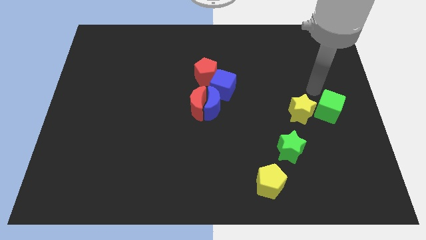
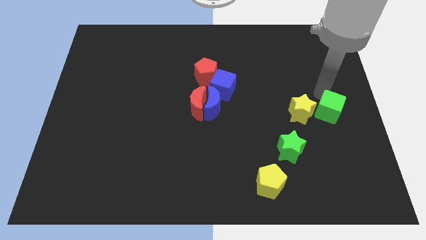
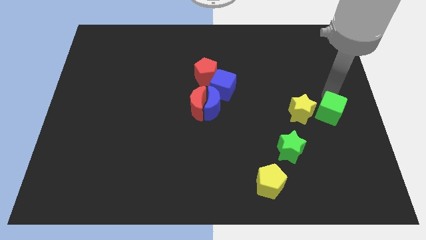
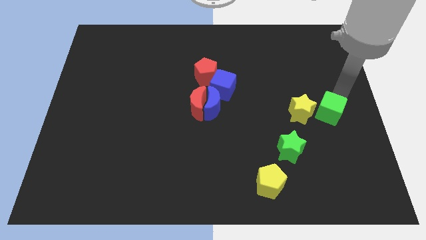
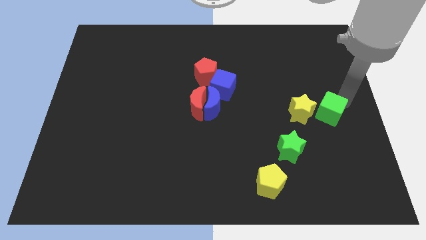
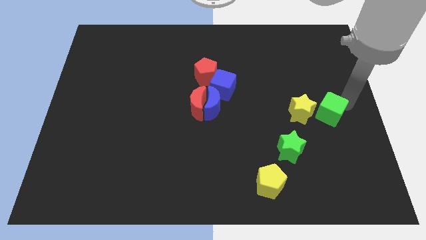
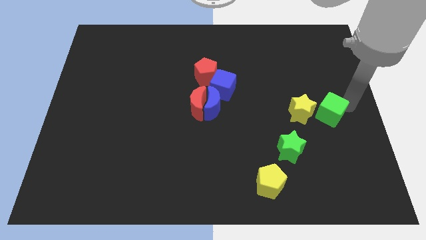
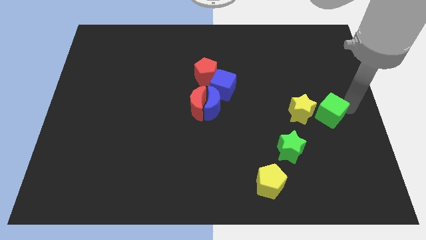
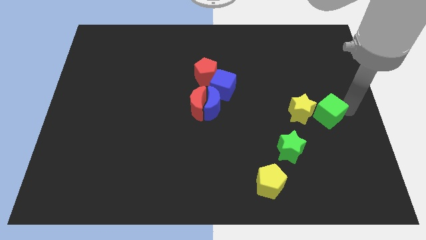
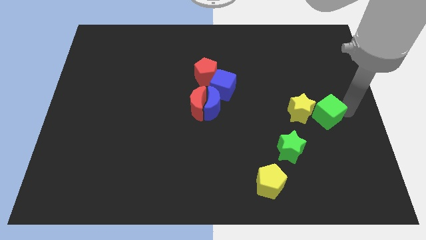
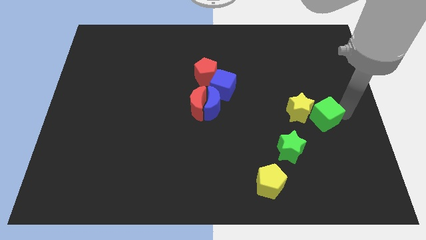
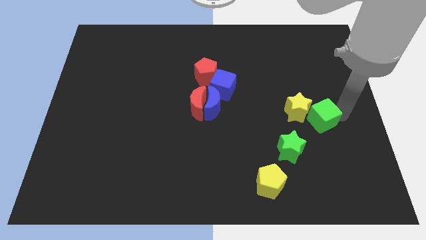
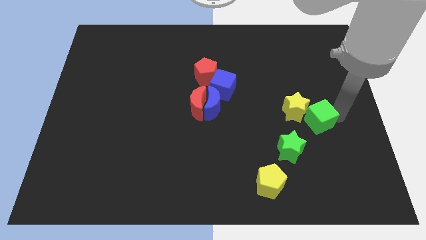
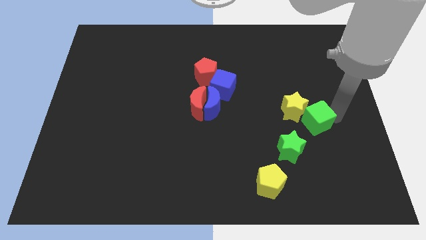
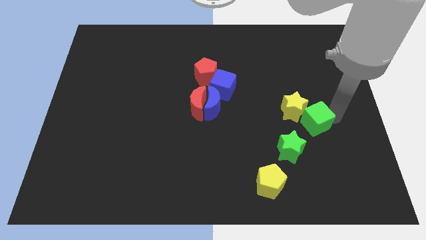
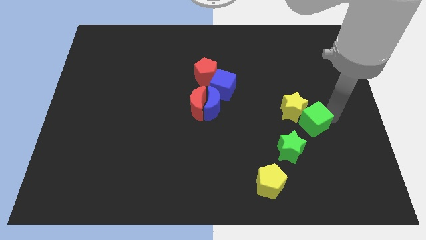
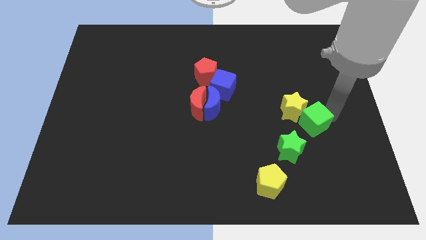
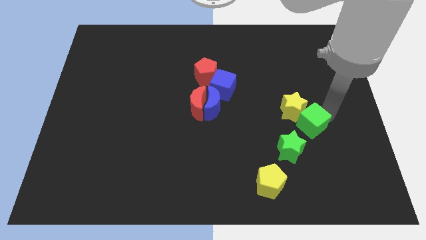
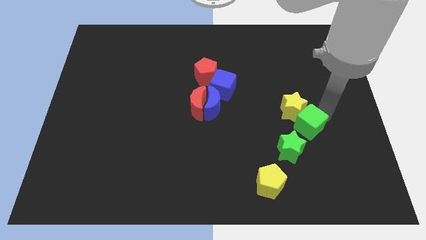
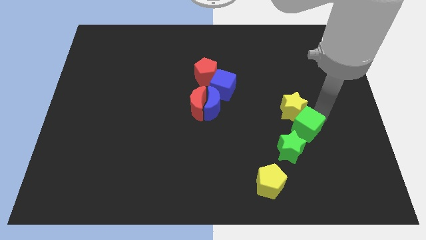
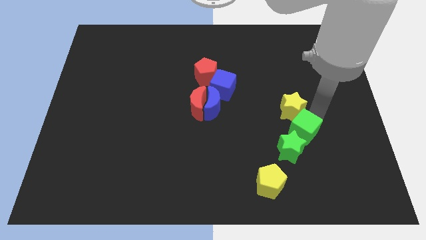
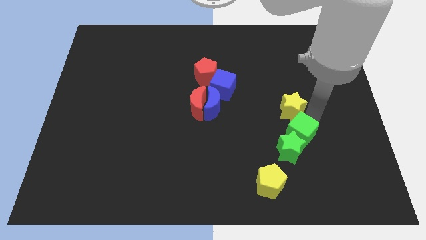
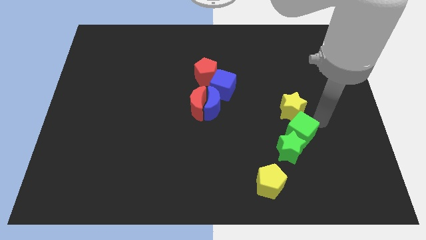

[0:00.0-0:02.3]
push the green cube into the green star

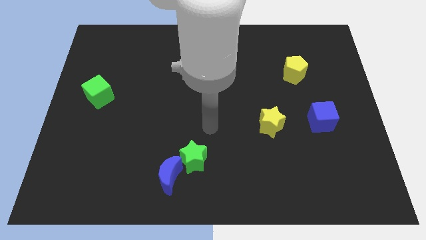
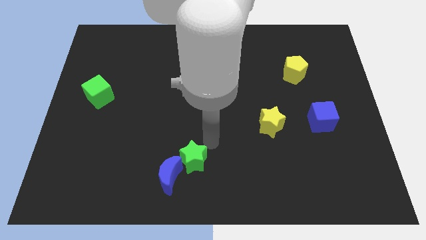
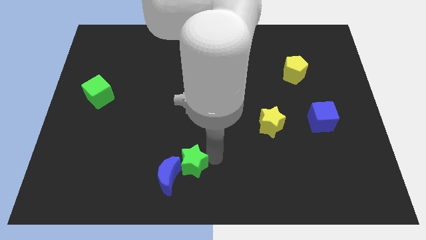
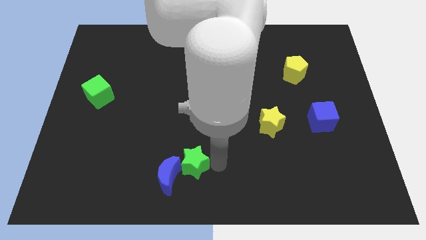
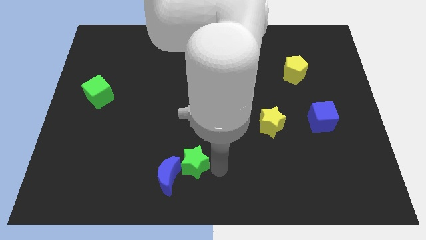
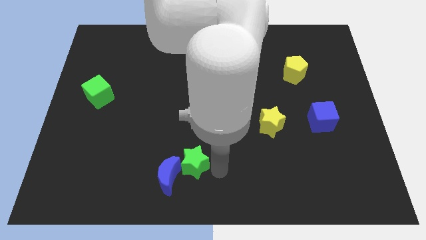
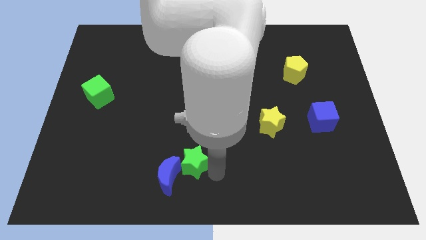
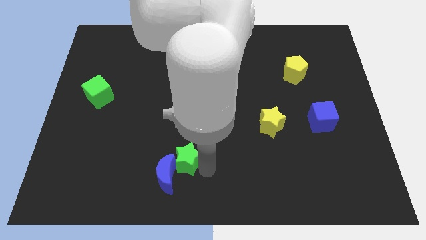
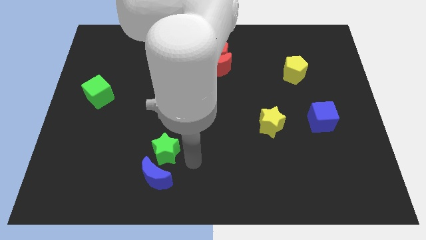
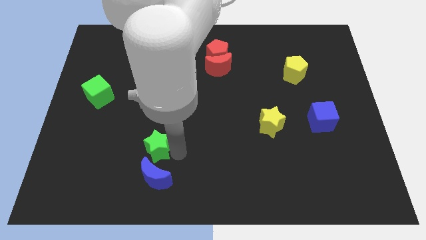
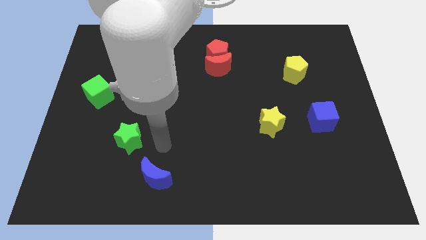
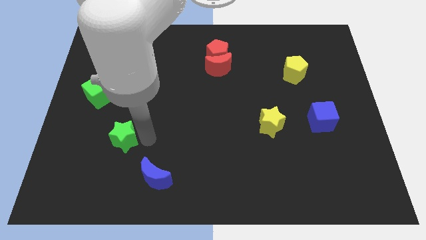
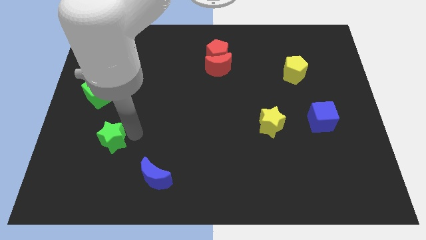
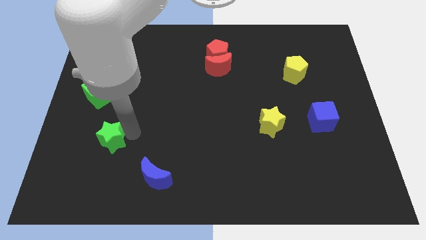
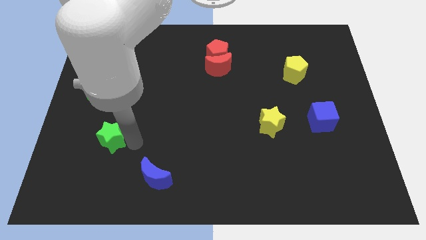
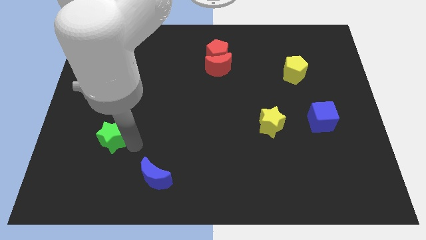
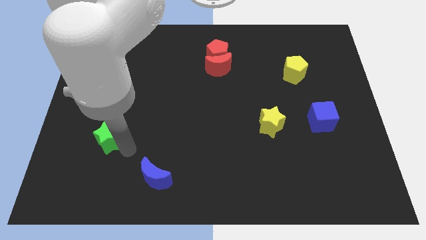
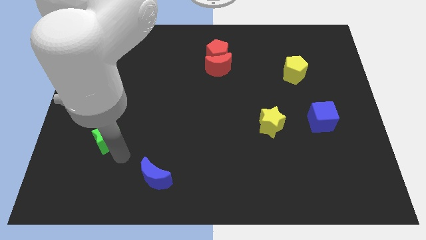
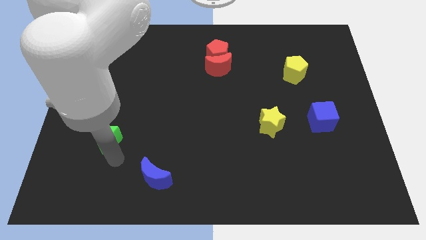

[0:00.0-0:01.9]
move the green star towards the green cube

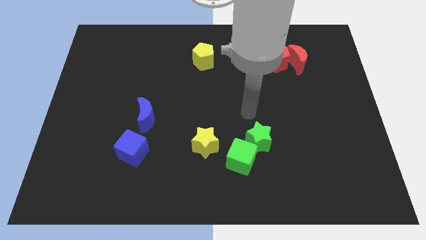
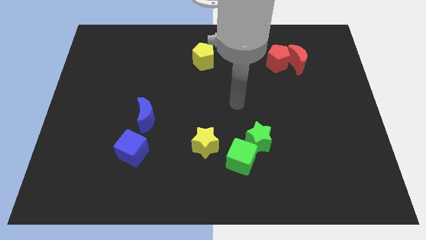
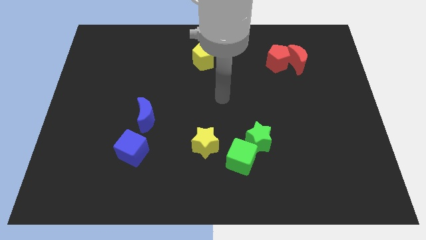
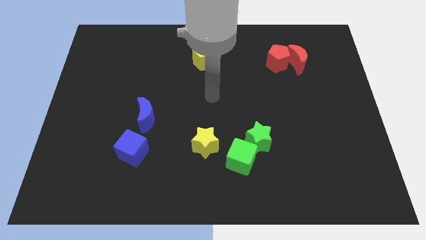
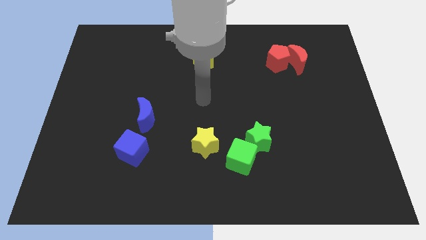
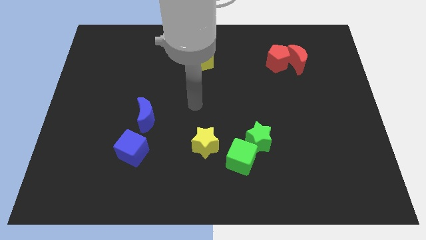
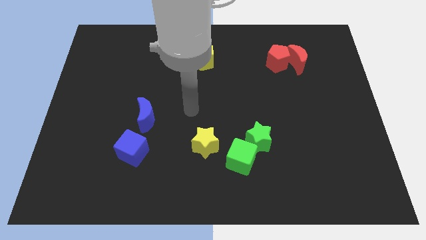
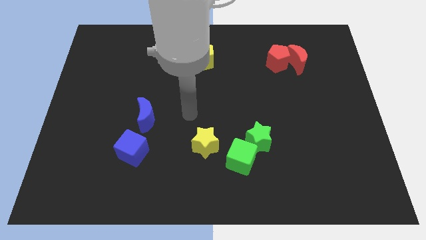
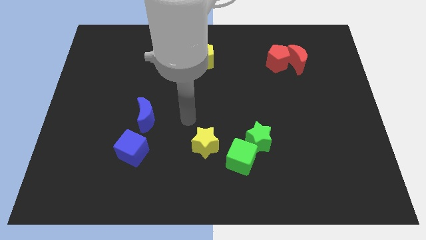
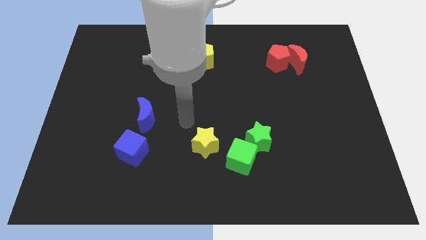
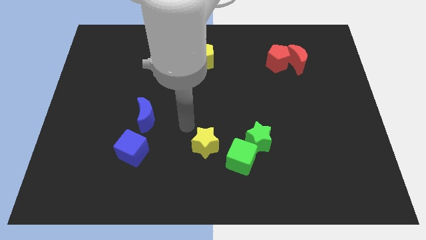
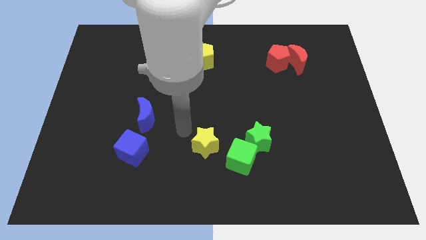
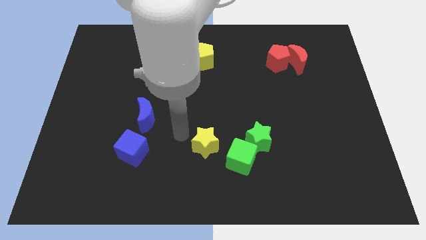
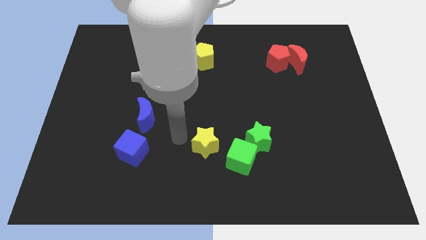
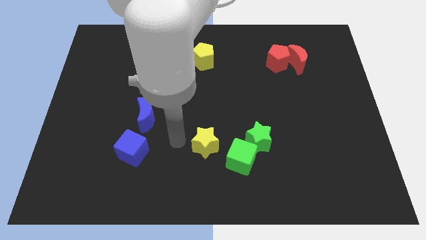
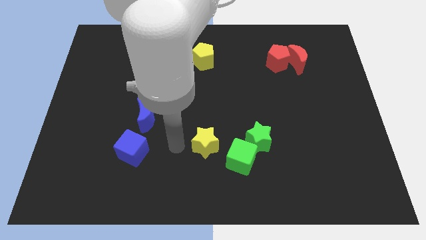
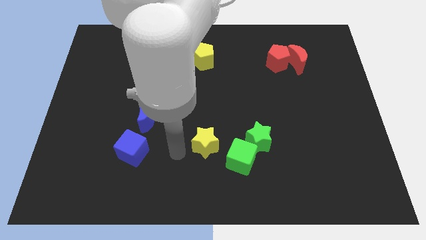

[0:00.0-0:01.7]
move your arm from the top of the green star to the left side of the yellow star

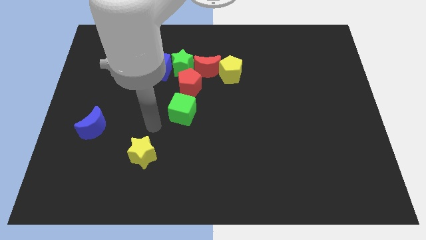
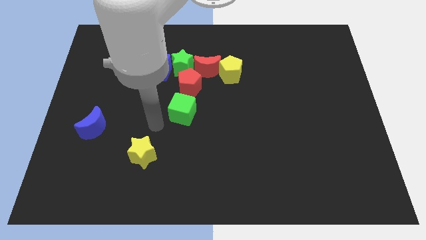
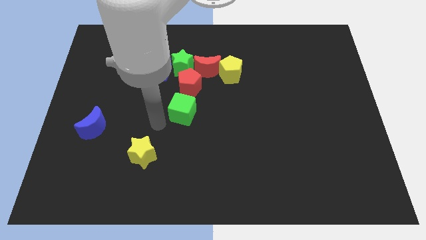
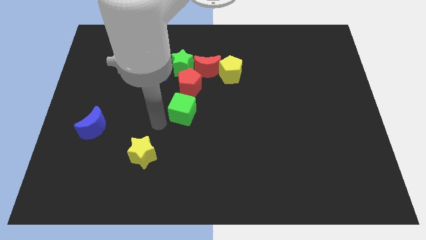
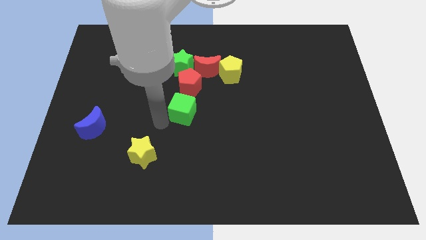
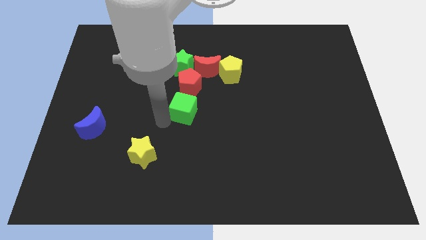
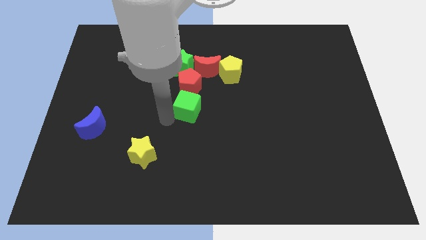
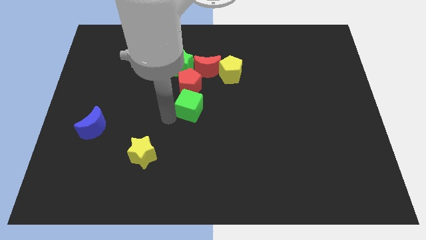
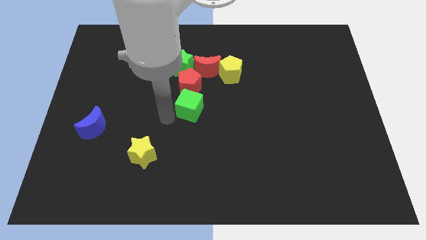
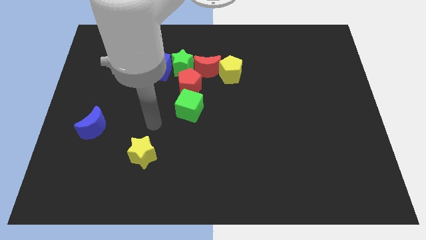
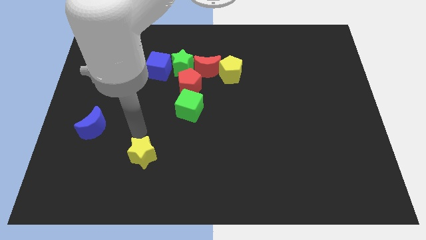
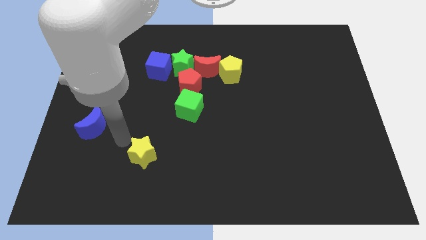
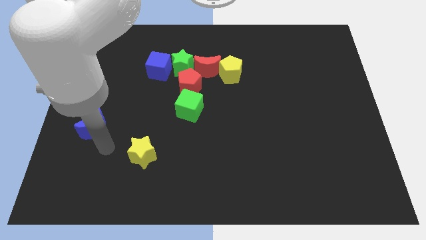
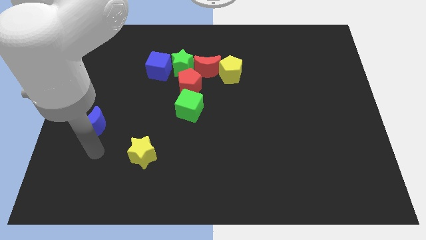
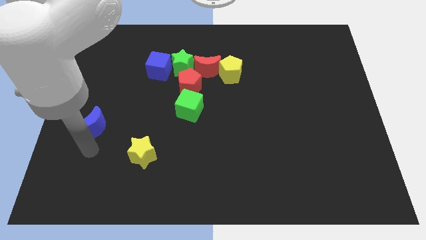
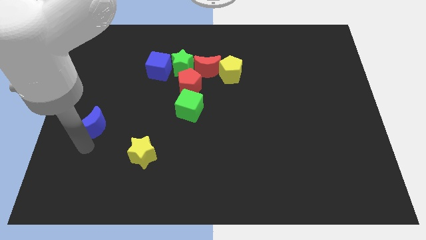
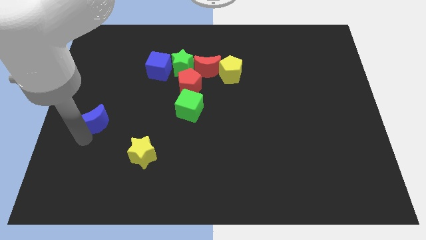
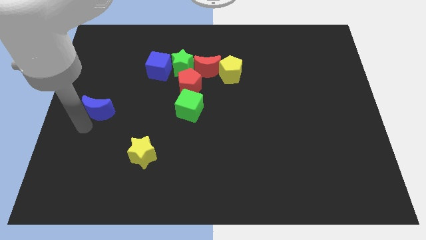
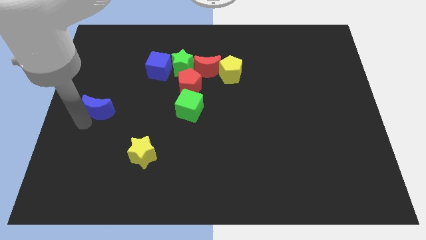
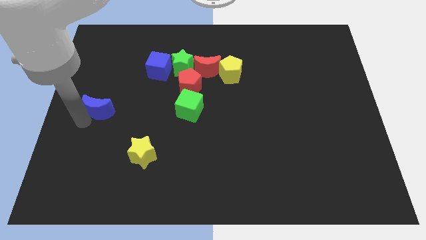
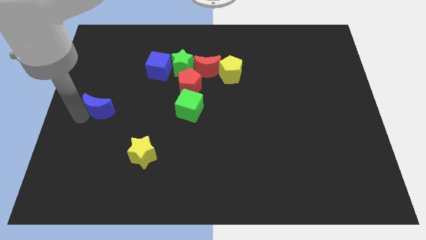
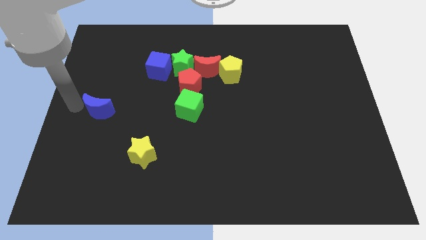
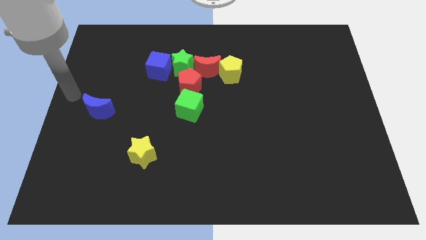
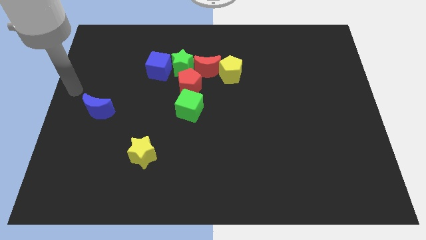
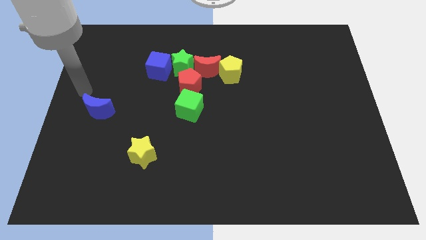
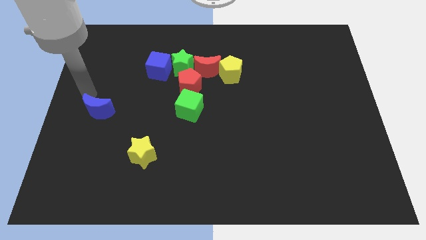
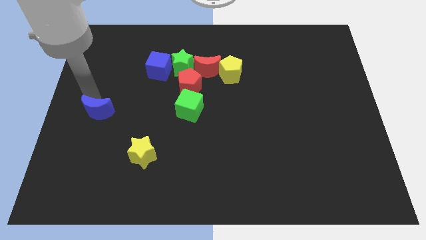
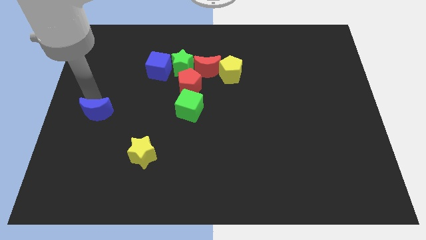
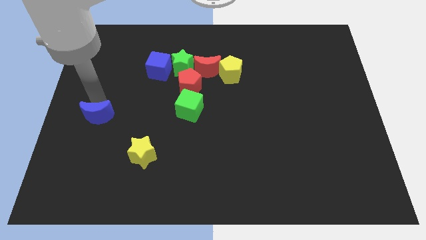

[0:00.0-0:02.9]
place the blue moon left to the green cube
